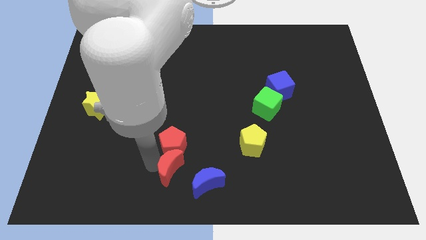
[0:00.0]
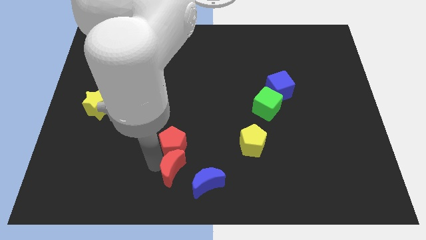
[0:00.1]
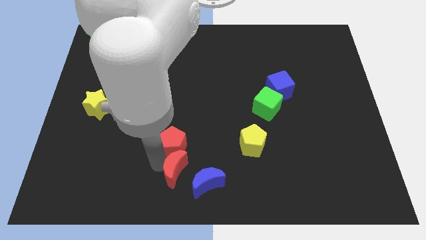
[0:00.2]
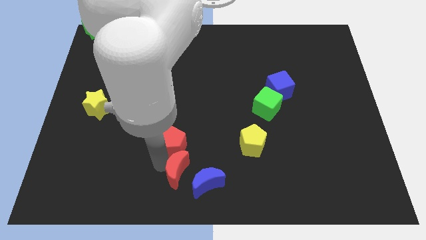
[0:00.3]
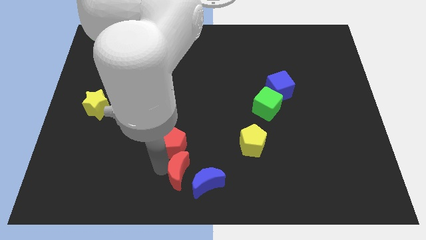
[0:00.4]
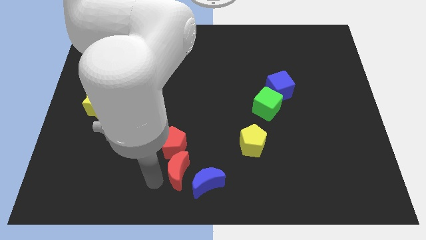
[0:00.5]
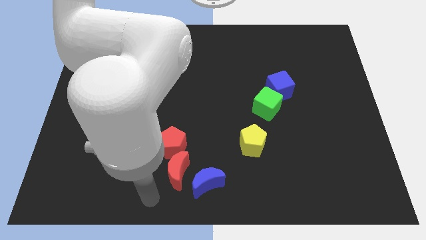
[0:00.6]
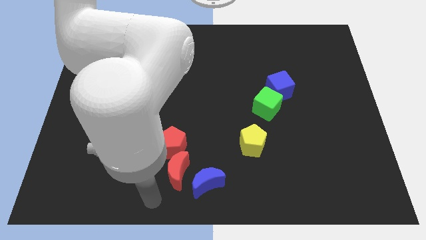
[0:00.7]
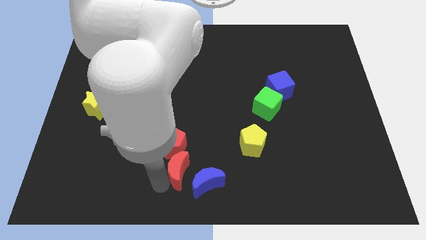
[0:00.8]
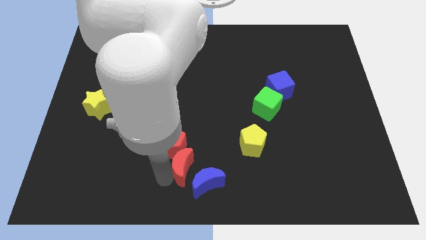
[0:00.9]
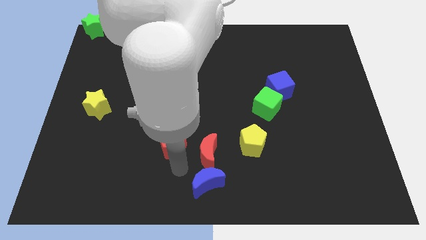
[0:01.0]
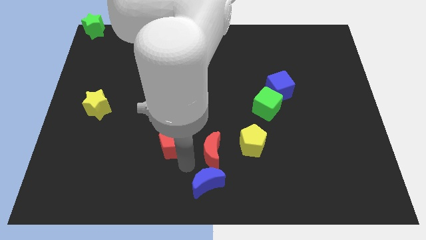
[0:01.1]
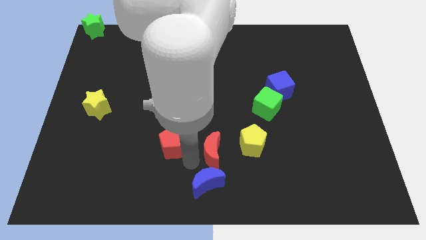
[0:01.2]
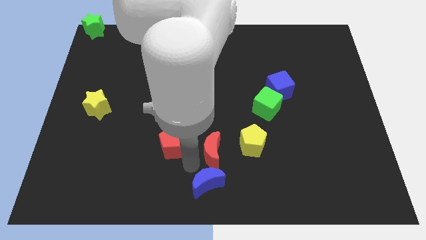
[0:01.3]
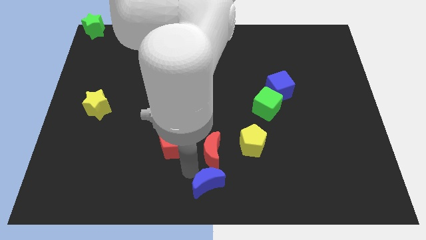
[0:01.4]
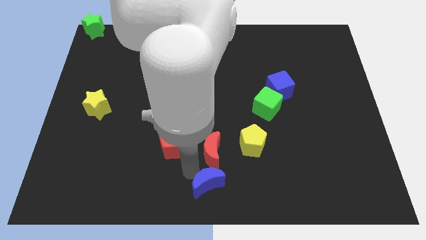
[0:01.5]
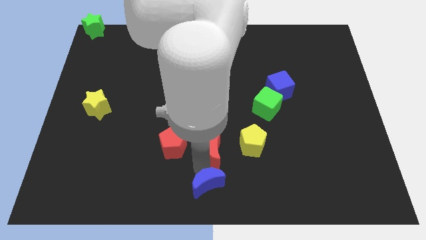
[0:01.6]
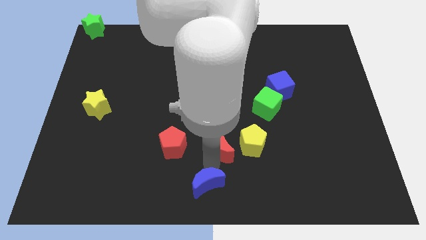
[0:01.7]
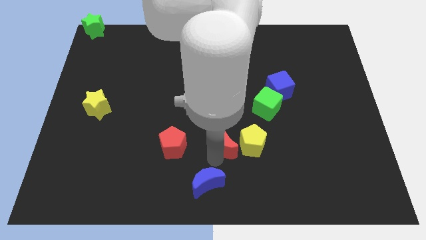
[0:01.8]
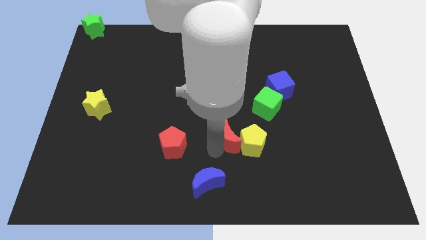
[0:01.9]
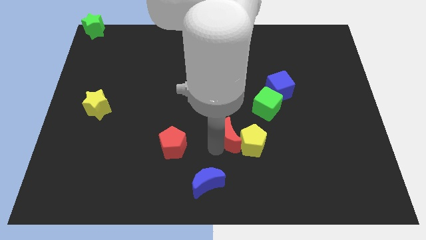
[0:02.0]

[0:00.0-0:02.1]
place the red crescent top left to yellow pentagon

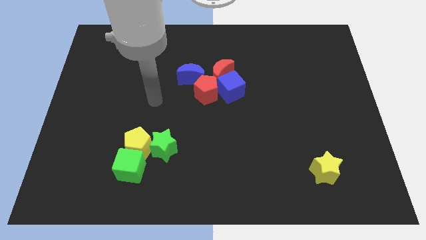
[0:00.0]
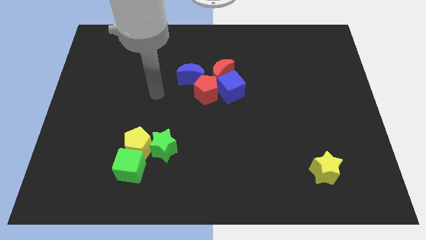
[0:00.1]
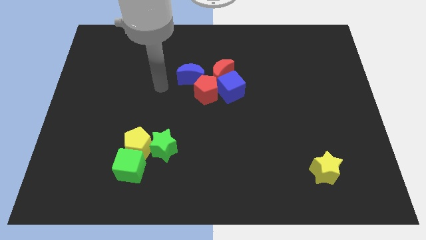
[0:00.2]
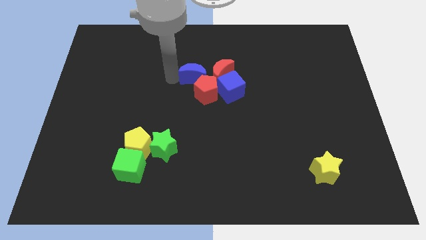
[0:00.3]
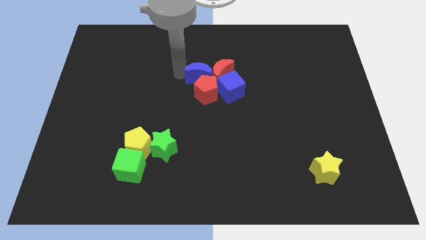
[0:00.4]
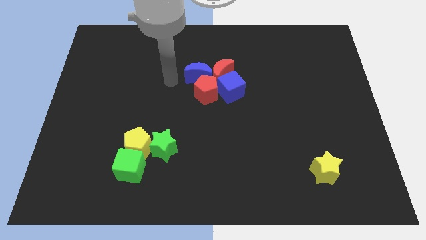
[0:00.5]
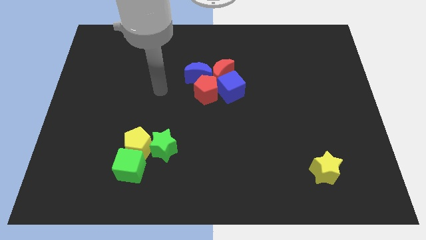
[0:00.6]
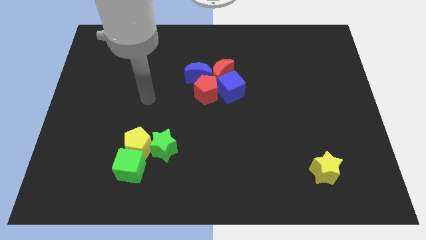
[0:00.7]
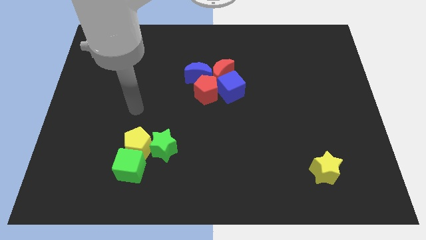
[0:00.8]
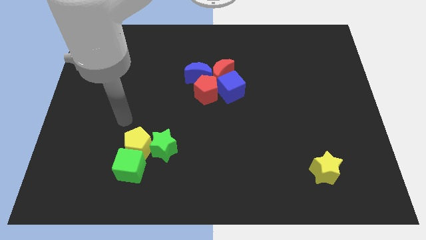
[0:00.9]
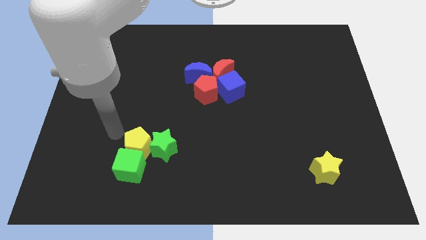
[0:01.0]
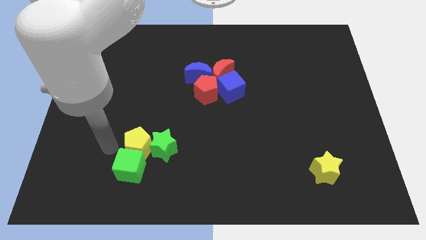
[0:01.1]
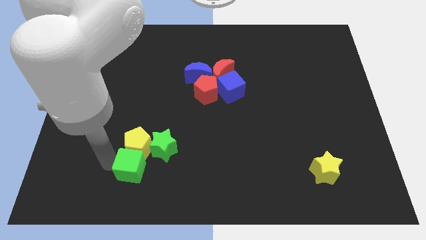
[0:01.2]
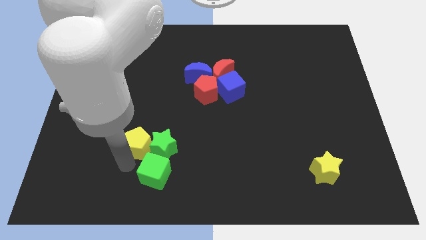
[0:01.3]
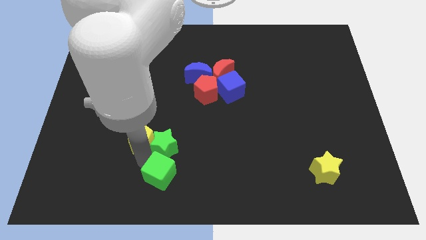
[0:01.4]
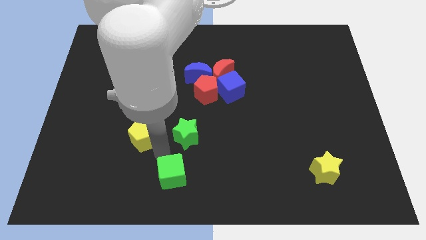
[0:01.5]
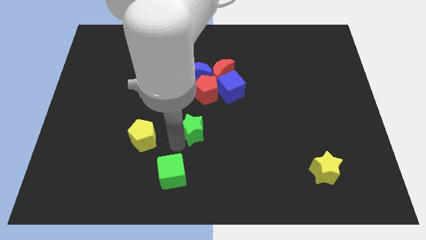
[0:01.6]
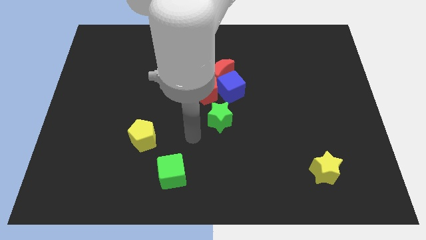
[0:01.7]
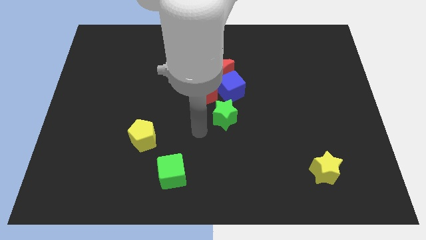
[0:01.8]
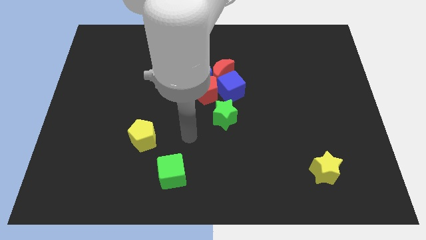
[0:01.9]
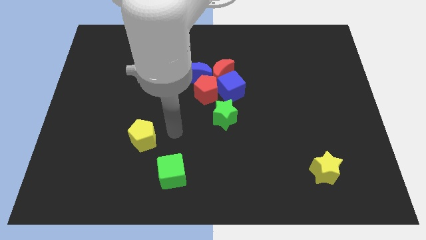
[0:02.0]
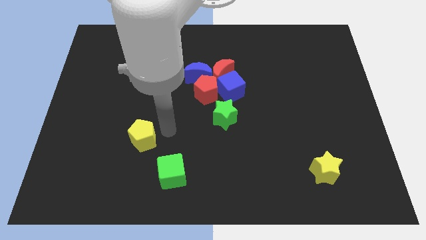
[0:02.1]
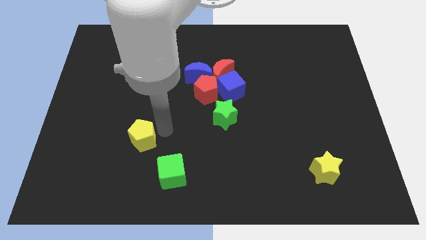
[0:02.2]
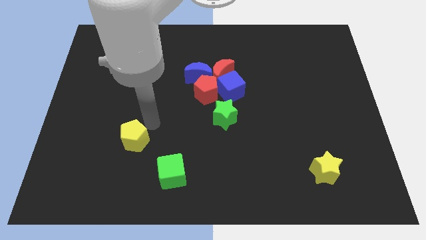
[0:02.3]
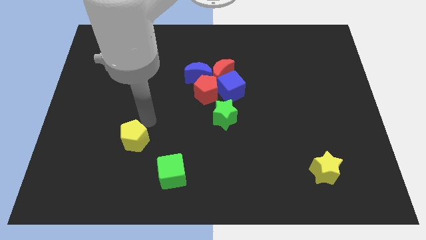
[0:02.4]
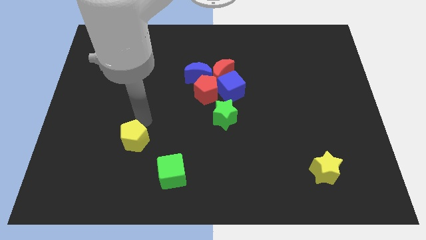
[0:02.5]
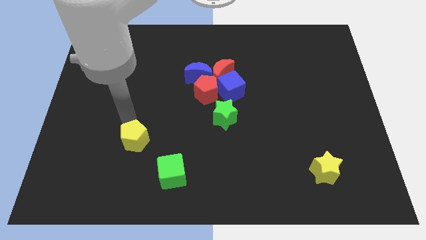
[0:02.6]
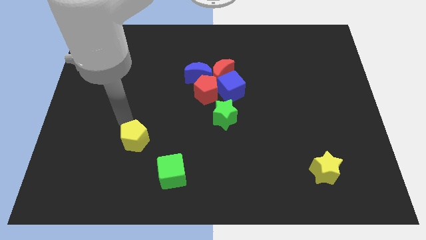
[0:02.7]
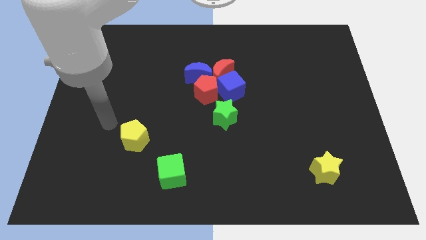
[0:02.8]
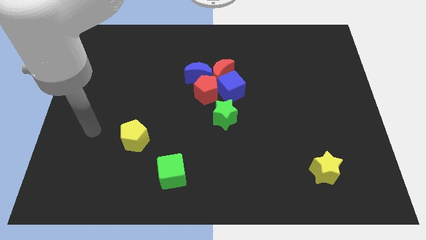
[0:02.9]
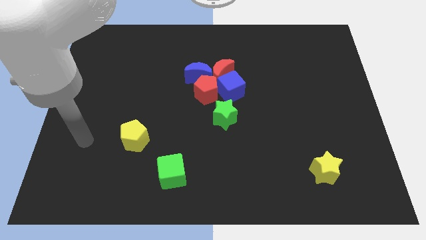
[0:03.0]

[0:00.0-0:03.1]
place the green star to the bottom side of the red and blue blocks

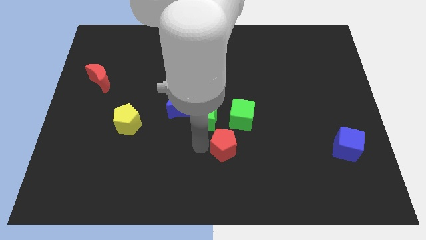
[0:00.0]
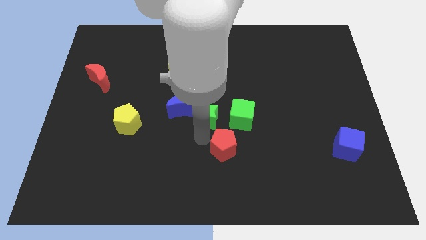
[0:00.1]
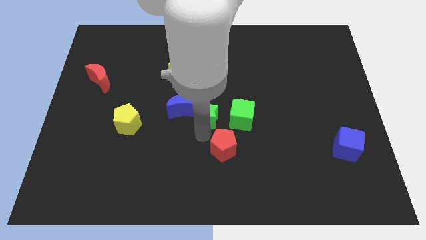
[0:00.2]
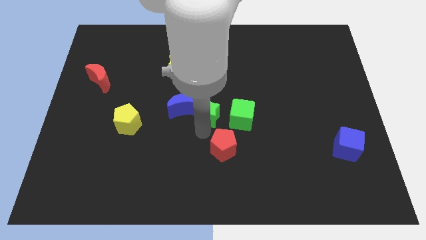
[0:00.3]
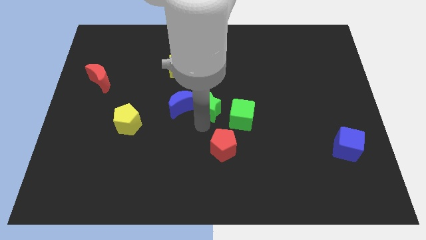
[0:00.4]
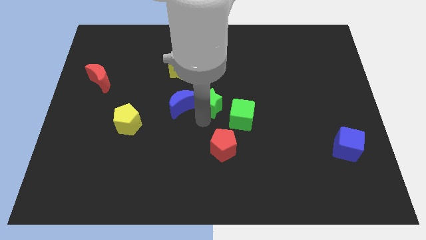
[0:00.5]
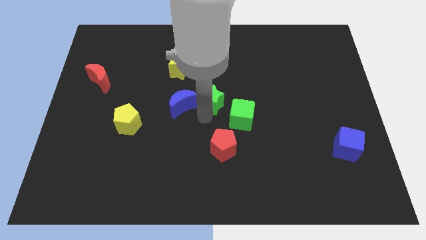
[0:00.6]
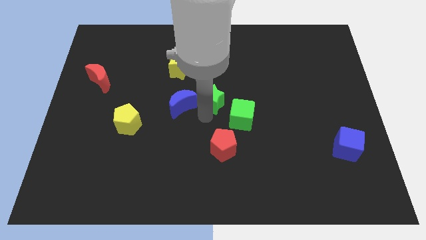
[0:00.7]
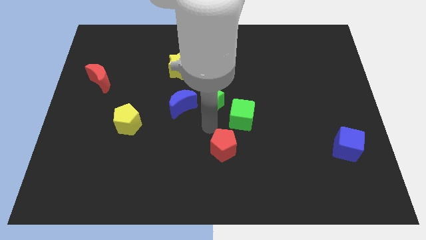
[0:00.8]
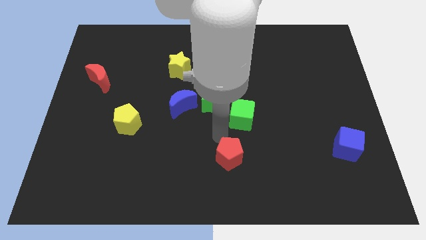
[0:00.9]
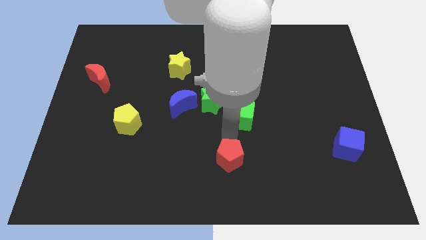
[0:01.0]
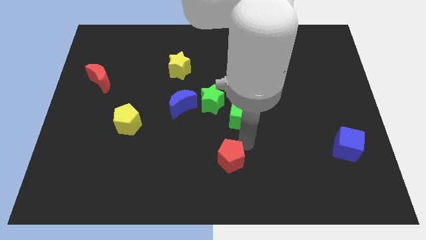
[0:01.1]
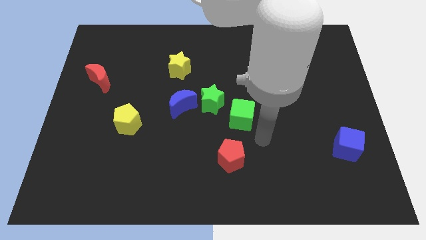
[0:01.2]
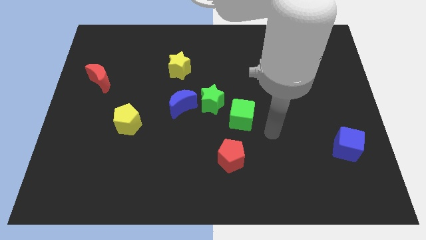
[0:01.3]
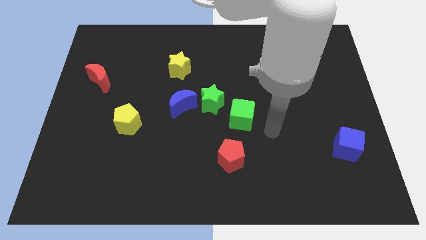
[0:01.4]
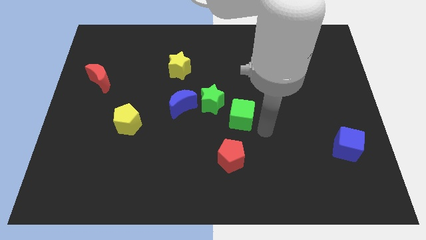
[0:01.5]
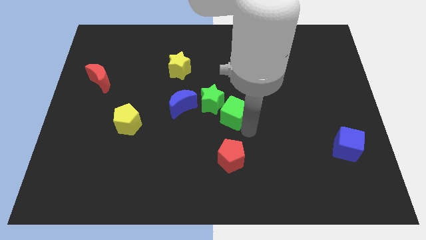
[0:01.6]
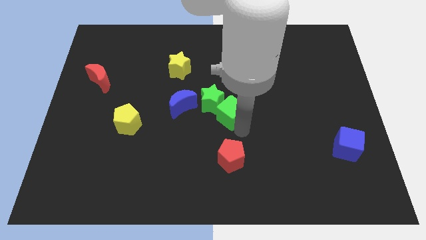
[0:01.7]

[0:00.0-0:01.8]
move the red pentagon below the green cube

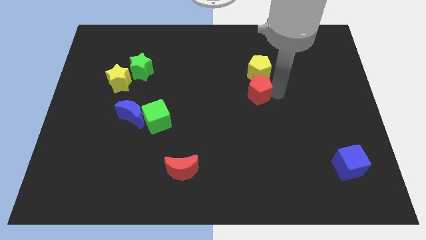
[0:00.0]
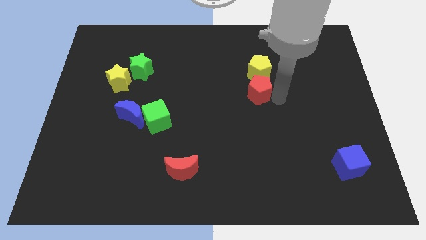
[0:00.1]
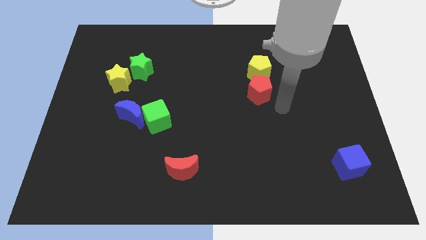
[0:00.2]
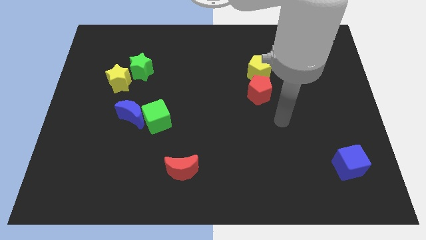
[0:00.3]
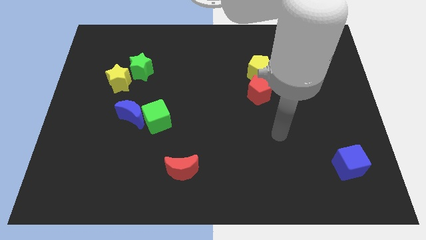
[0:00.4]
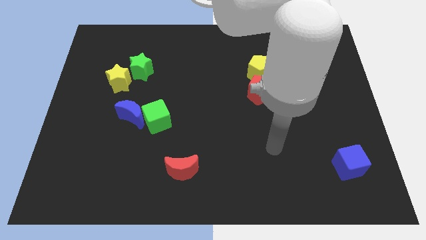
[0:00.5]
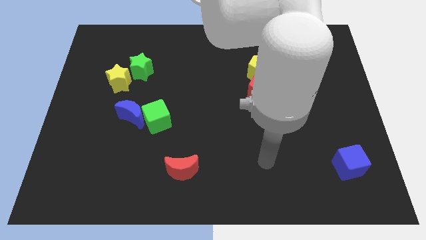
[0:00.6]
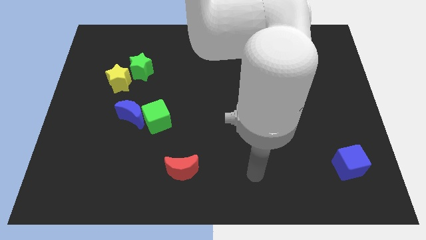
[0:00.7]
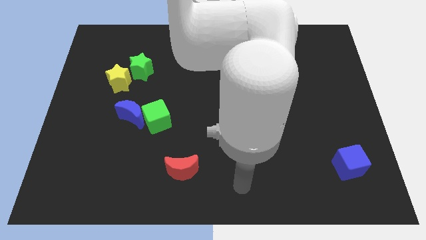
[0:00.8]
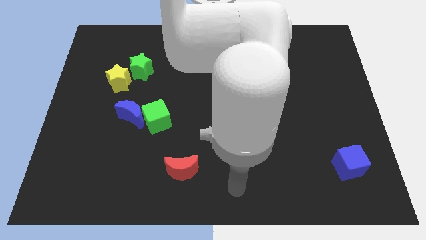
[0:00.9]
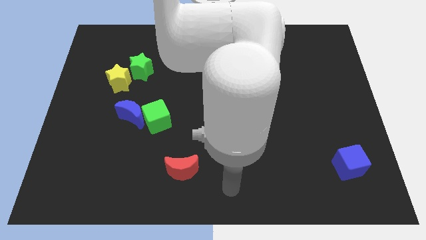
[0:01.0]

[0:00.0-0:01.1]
take your hand away from the red pentagon

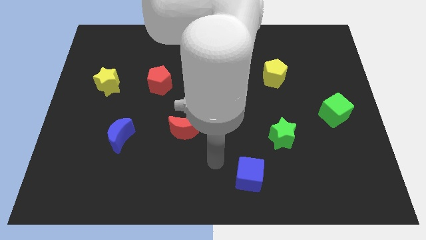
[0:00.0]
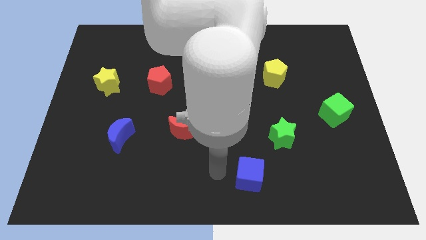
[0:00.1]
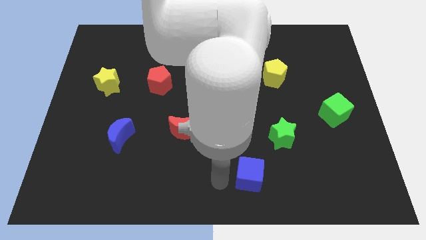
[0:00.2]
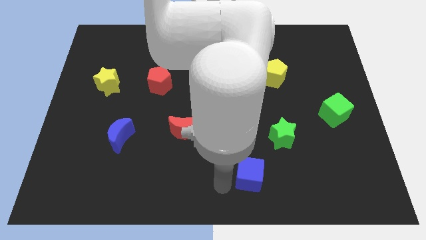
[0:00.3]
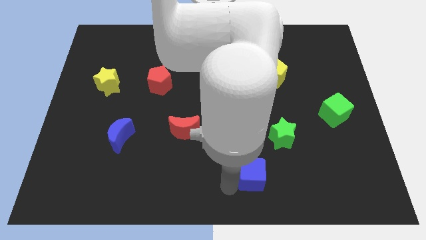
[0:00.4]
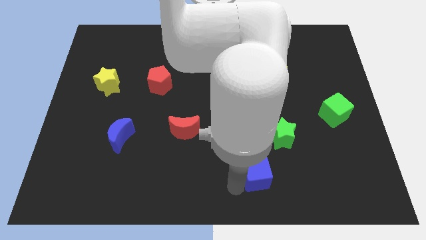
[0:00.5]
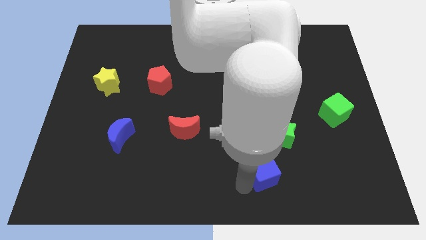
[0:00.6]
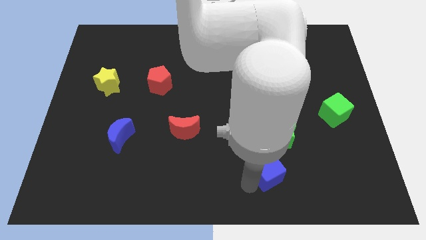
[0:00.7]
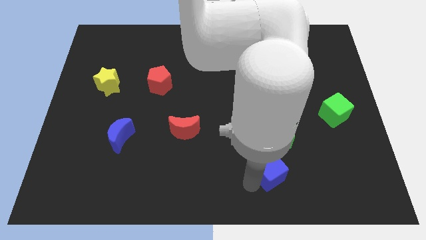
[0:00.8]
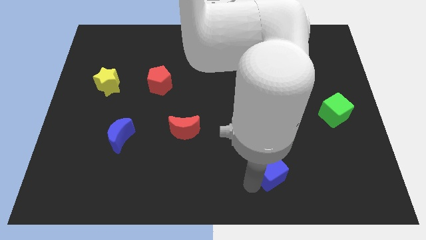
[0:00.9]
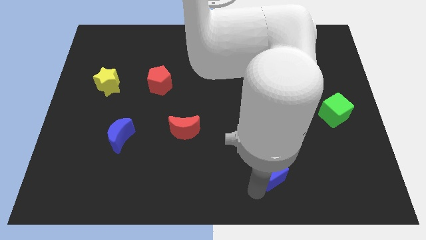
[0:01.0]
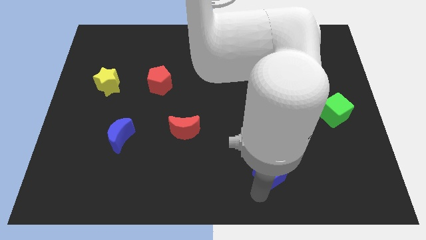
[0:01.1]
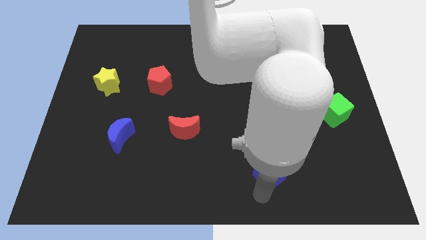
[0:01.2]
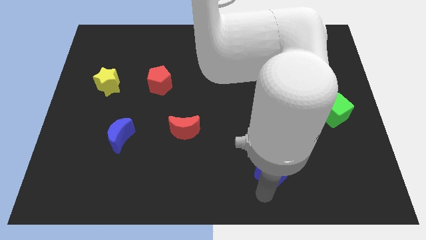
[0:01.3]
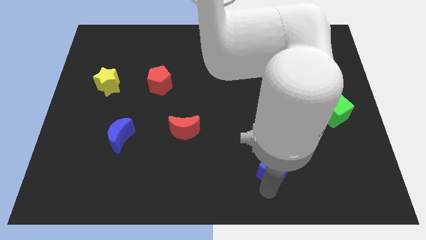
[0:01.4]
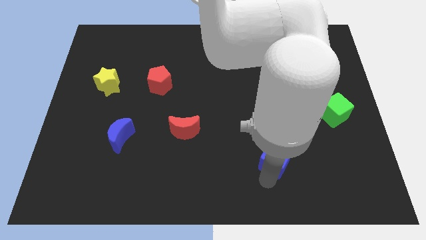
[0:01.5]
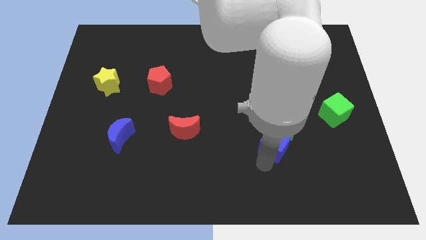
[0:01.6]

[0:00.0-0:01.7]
push the blue cube into the green star
